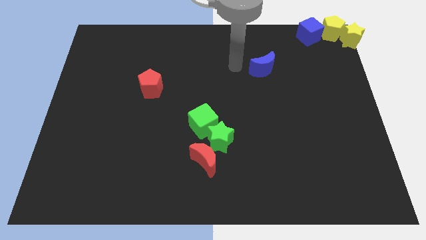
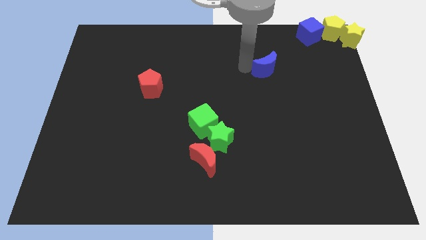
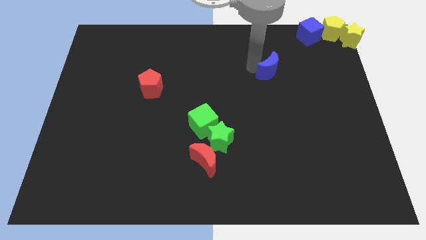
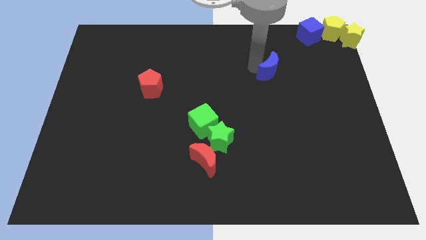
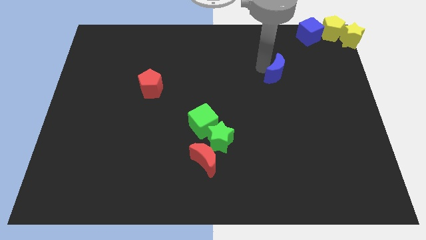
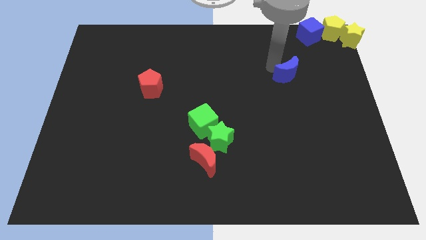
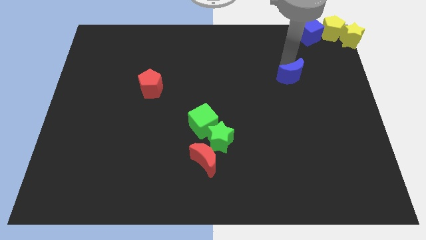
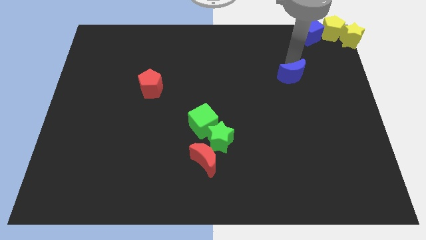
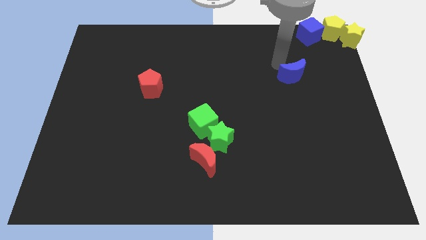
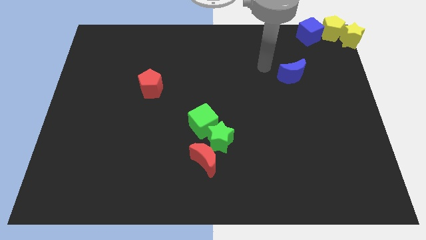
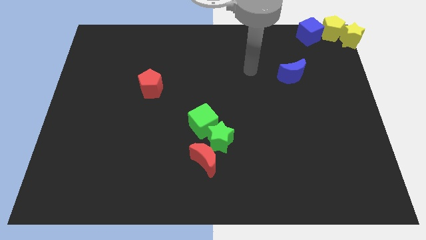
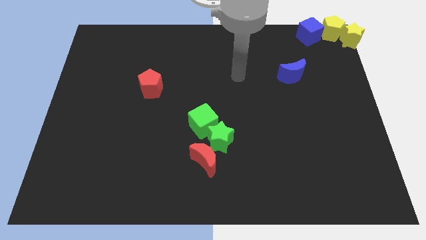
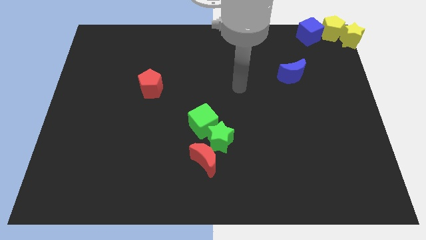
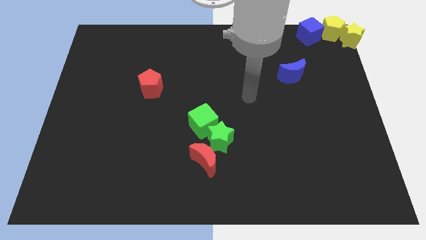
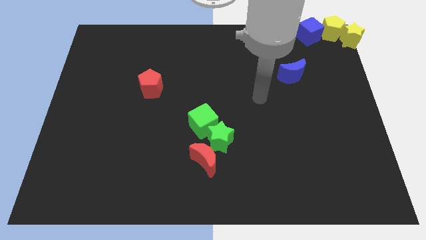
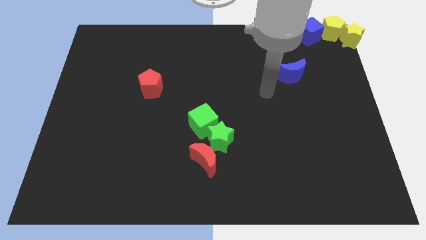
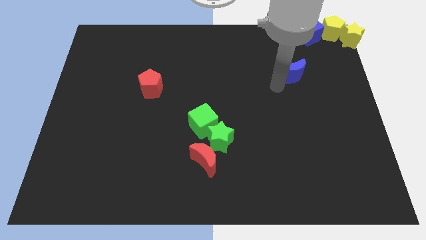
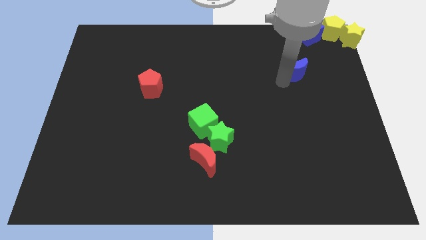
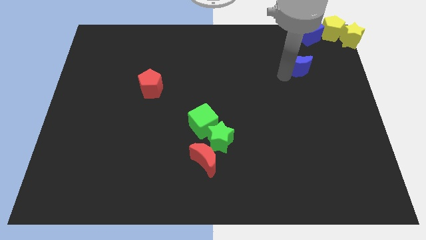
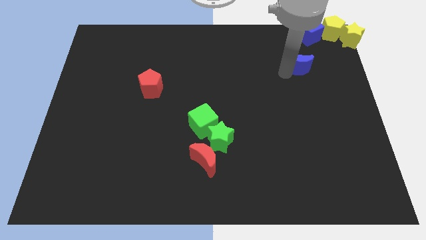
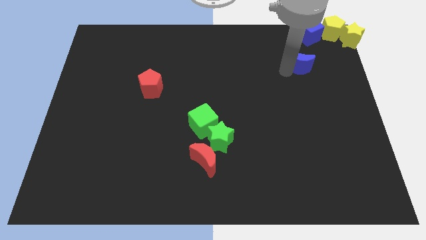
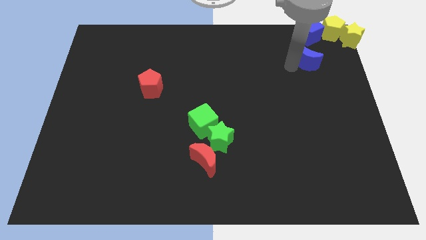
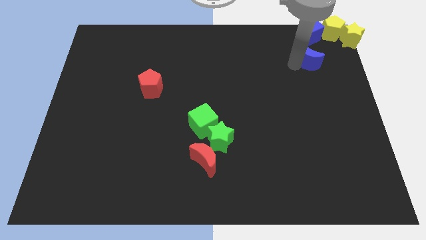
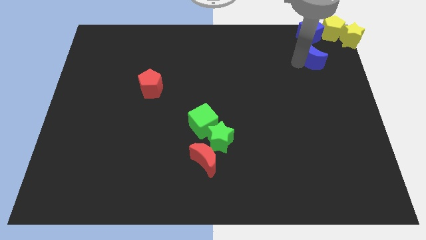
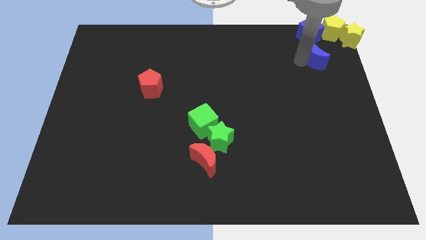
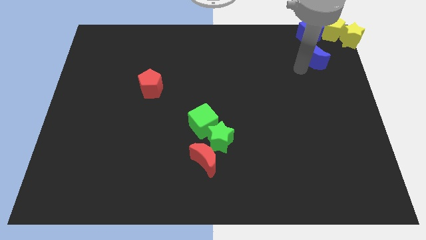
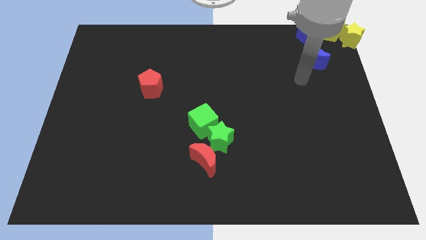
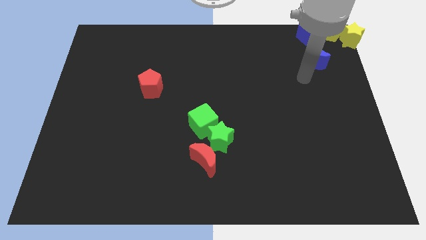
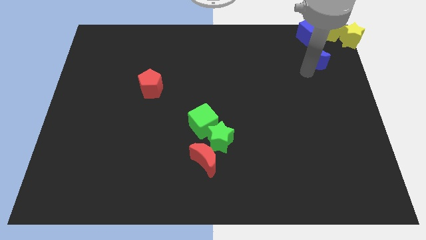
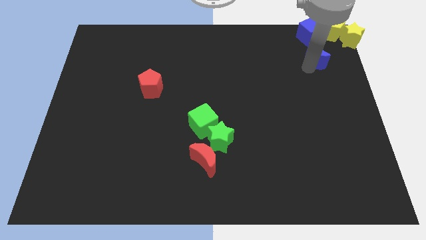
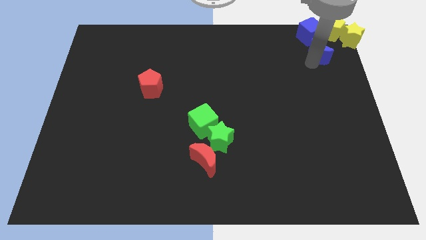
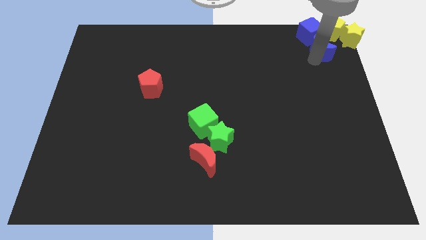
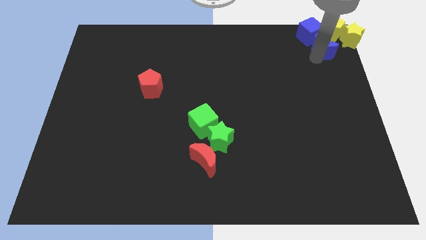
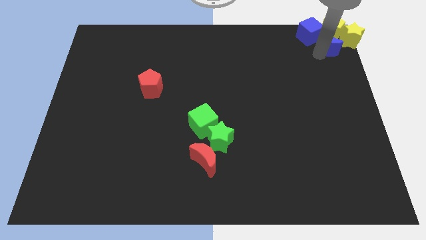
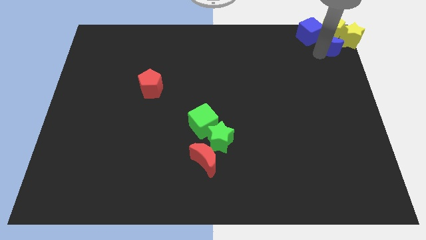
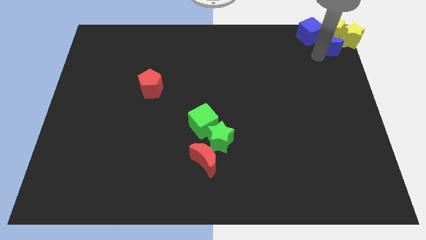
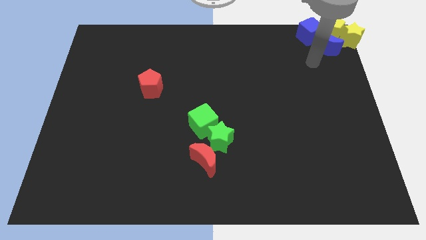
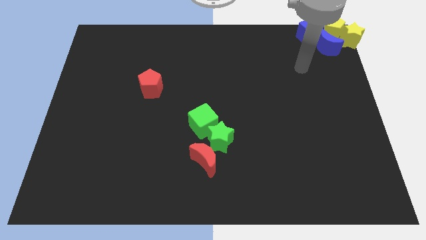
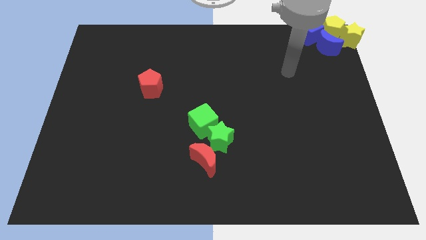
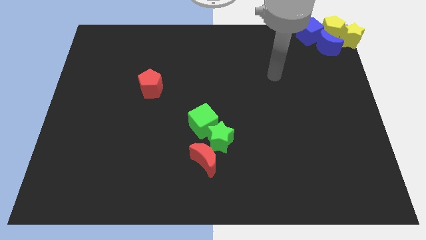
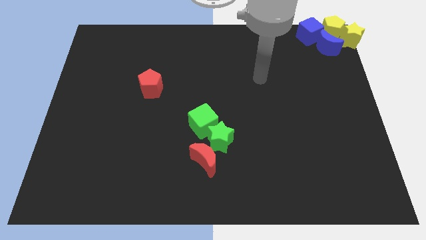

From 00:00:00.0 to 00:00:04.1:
place the blue crescent below the yellow pentagon

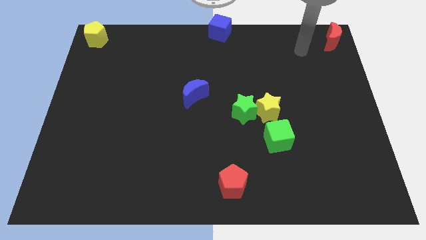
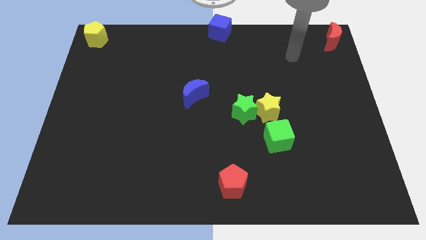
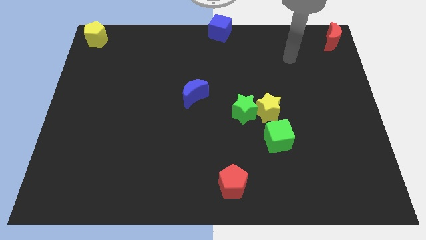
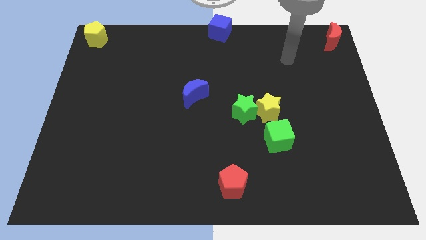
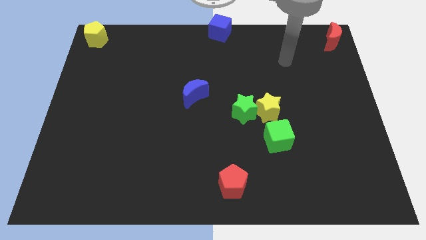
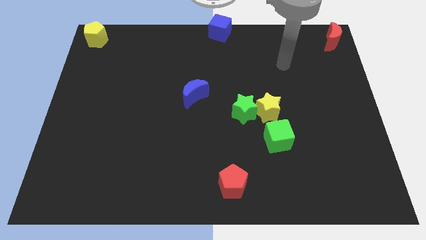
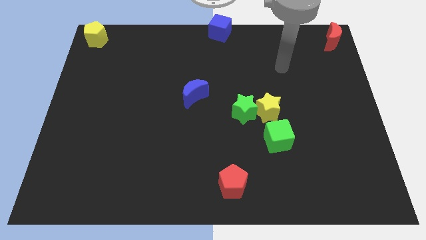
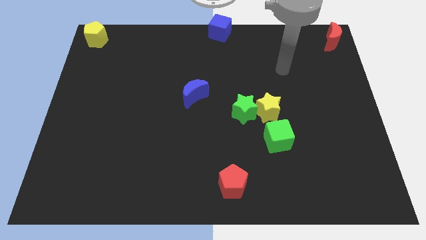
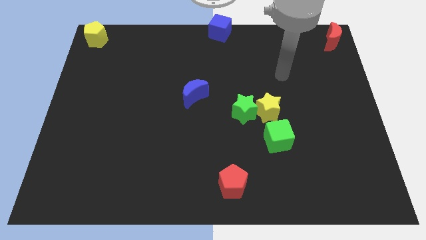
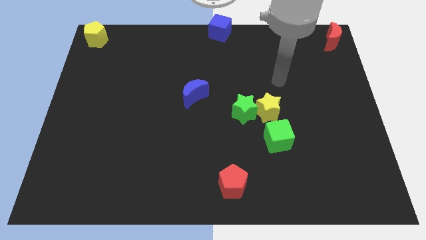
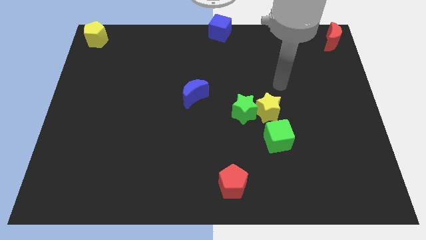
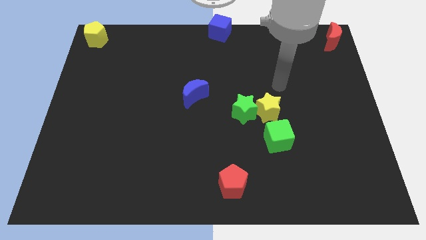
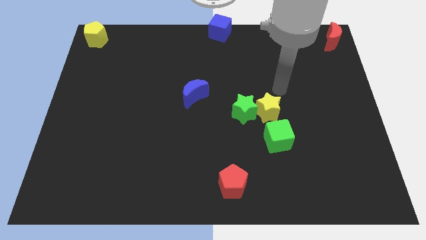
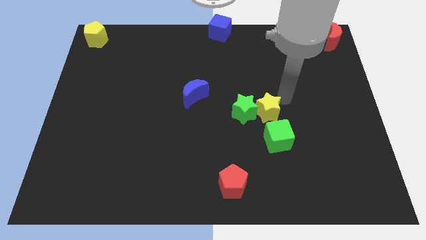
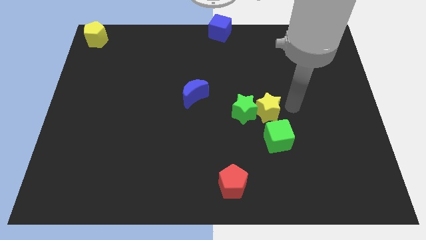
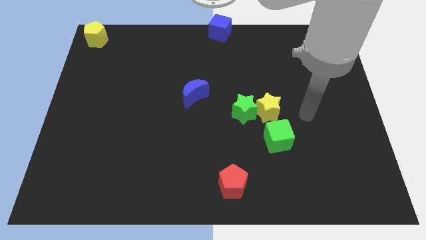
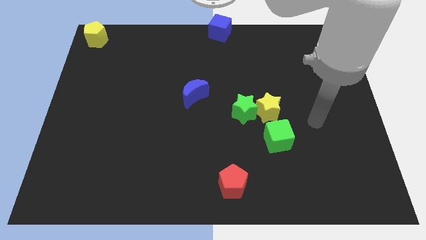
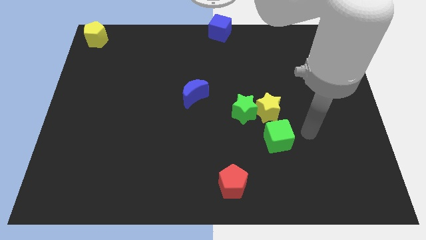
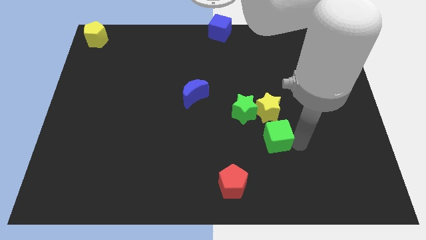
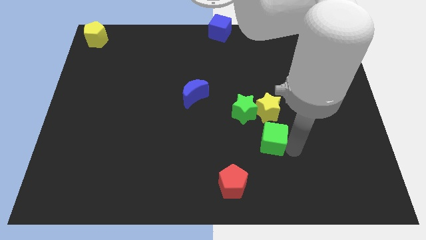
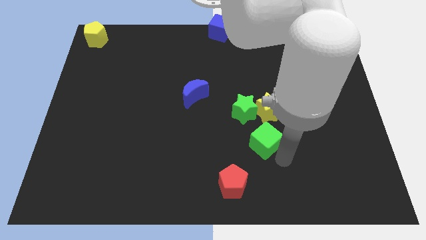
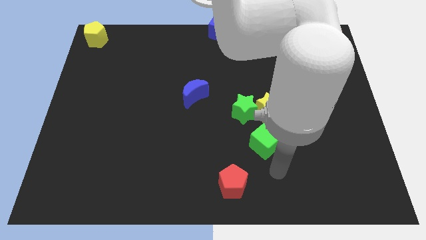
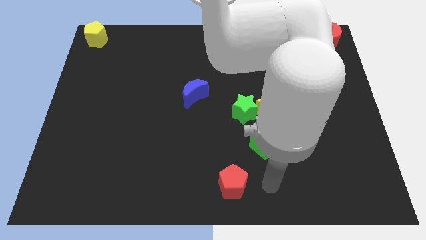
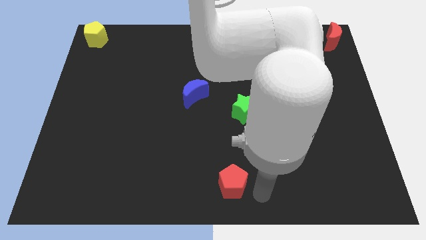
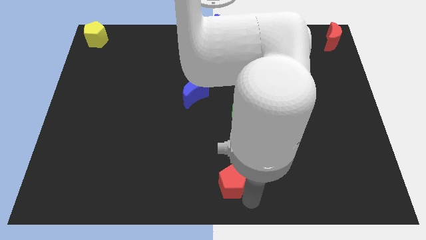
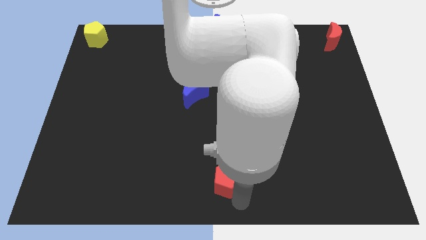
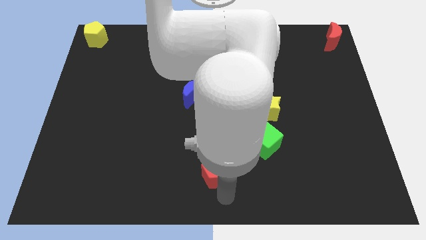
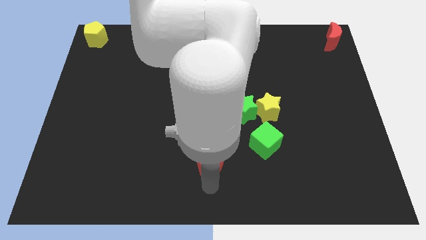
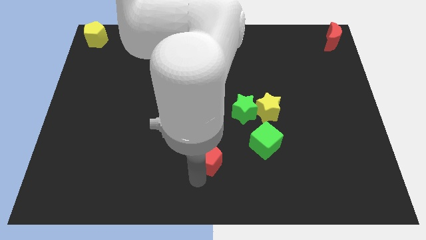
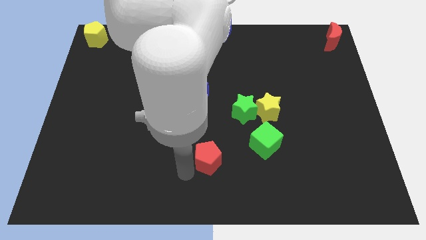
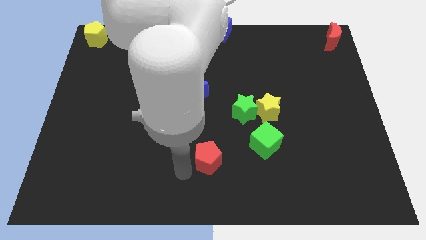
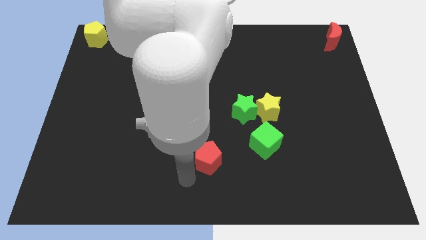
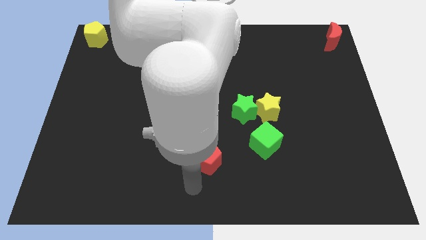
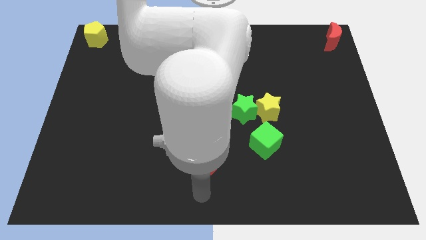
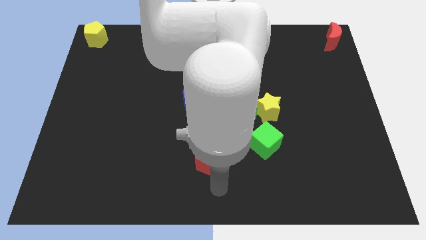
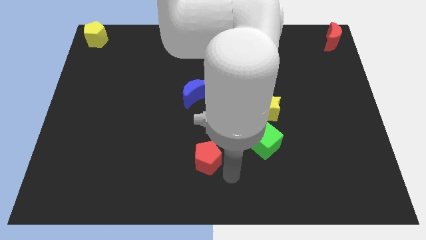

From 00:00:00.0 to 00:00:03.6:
move the red pentagon to the top of the board

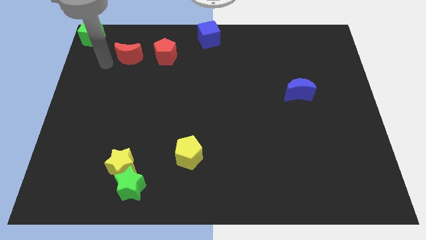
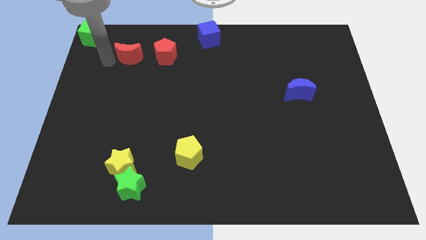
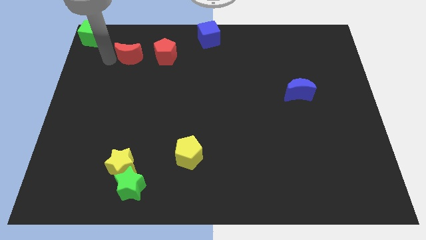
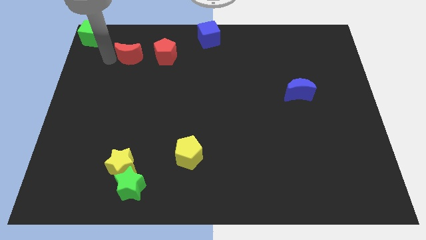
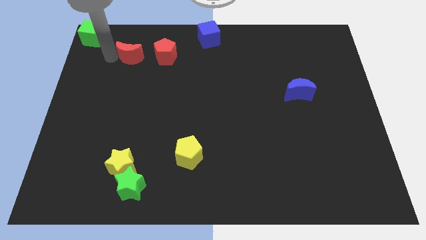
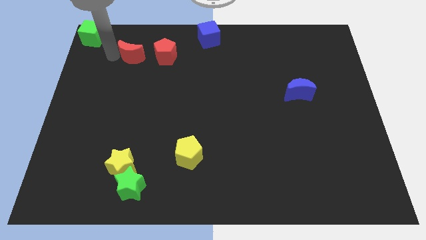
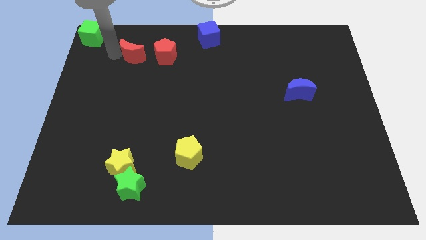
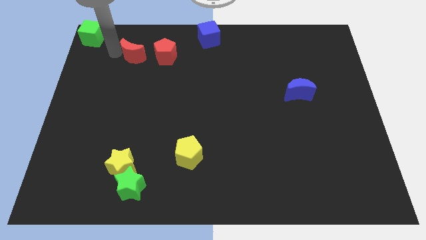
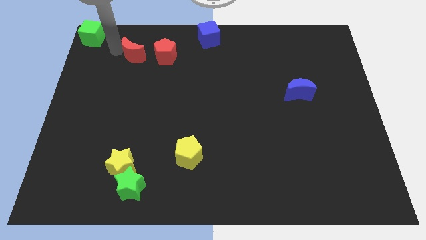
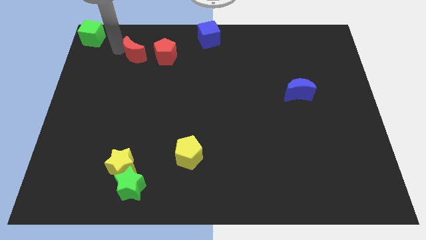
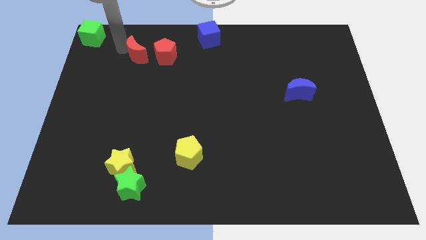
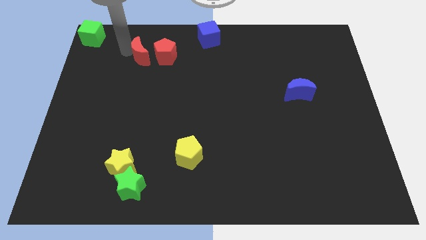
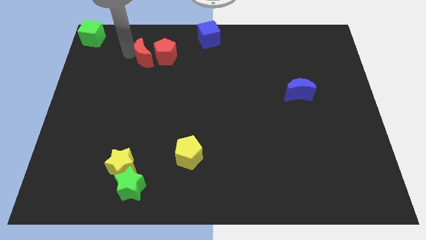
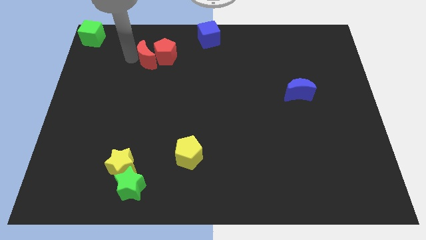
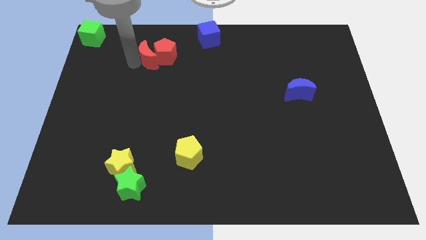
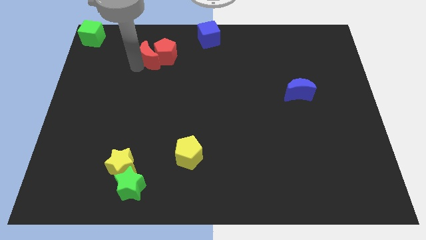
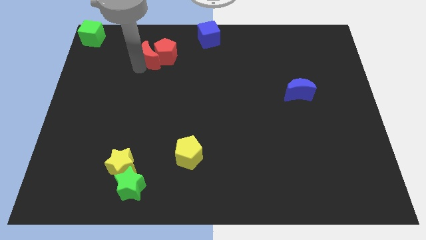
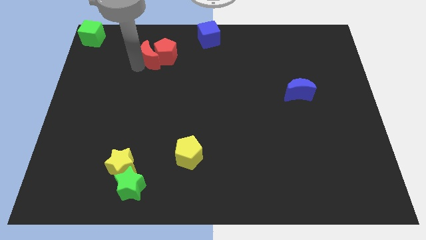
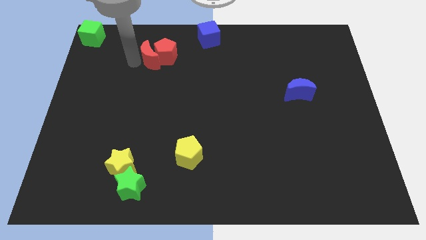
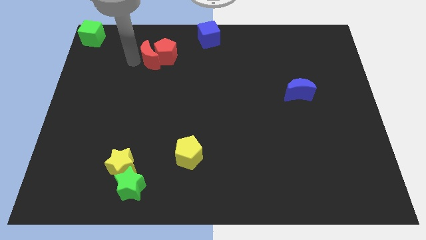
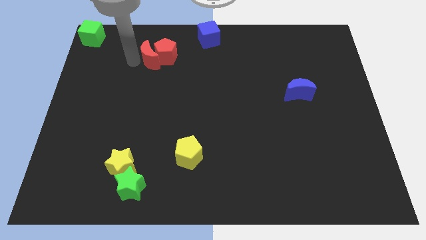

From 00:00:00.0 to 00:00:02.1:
move the red moon into the red pentagon
